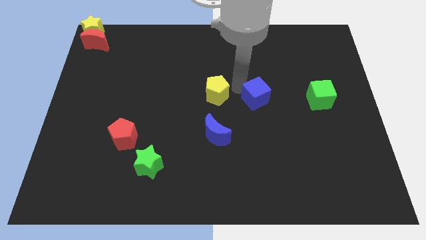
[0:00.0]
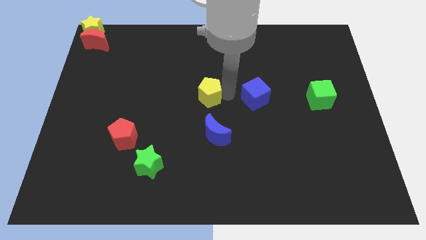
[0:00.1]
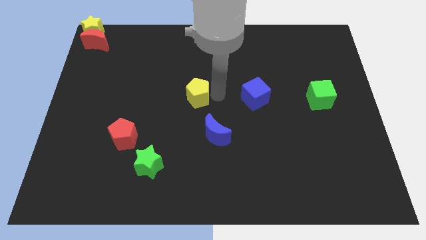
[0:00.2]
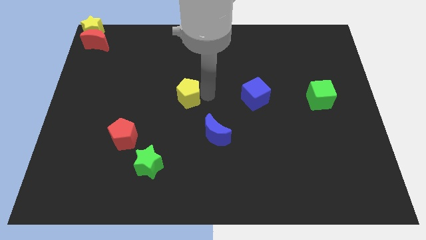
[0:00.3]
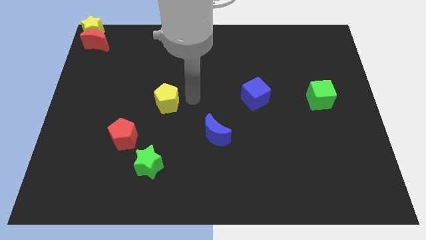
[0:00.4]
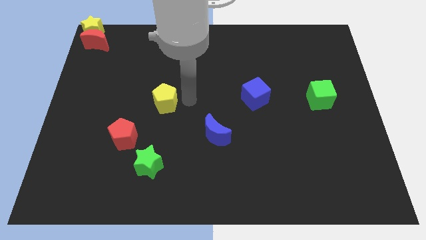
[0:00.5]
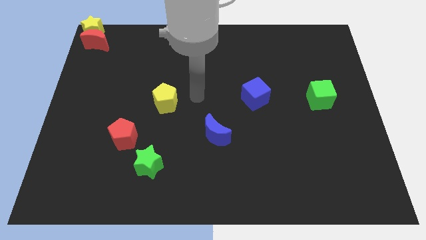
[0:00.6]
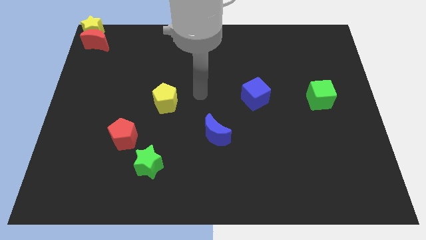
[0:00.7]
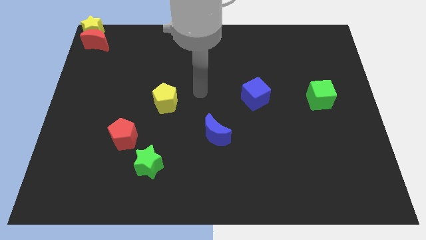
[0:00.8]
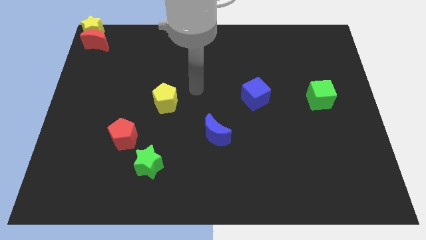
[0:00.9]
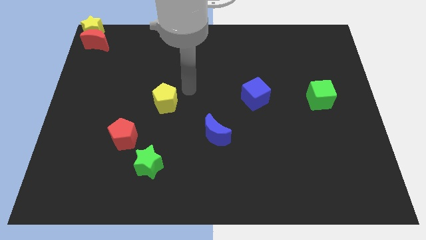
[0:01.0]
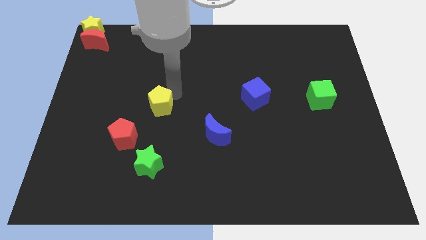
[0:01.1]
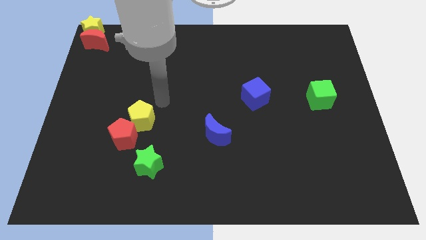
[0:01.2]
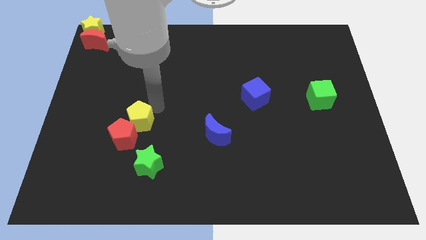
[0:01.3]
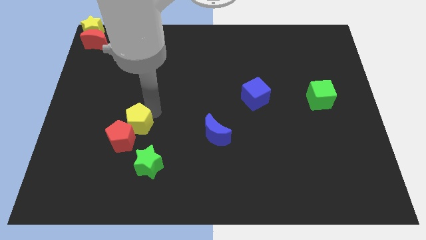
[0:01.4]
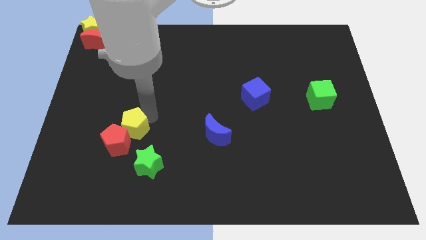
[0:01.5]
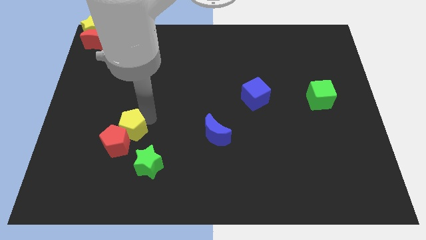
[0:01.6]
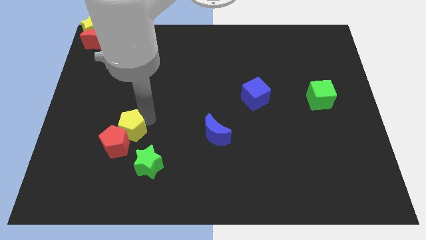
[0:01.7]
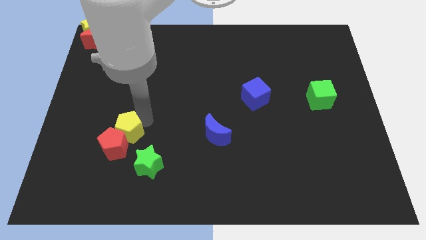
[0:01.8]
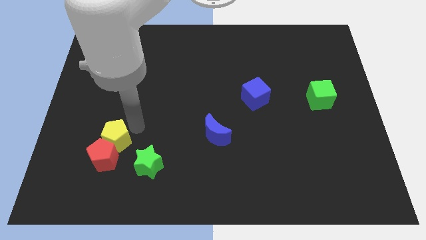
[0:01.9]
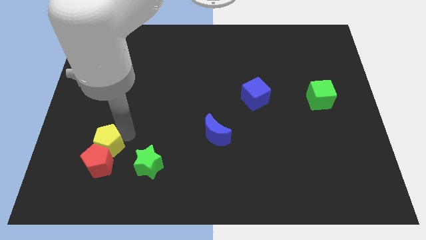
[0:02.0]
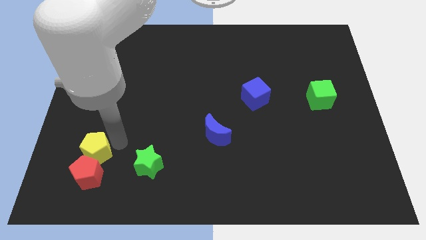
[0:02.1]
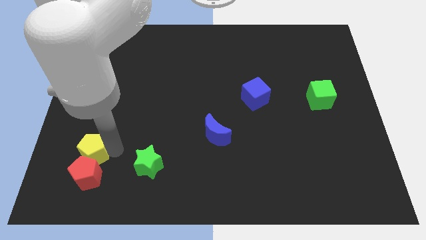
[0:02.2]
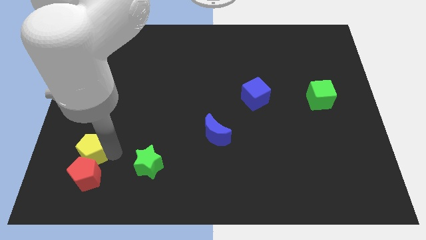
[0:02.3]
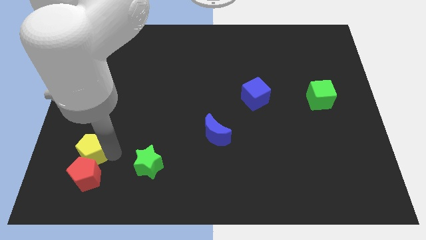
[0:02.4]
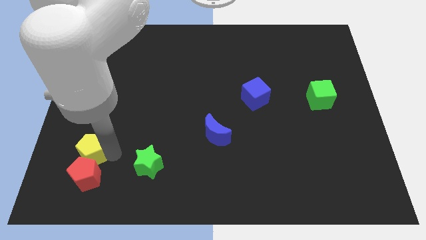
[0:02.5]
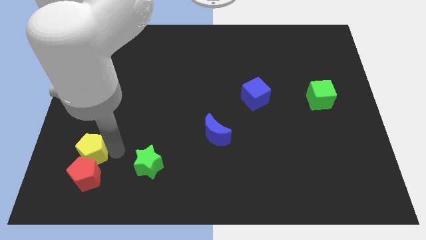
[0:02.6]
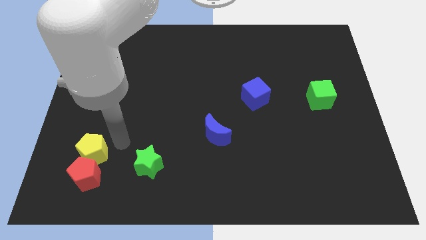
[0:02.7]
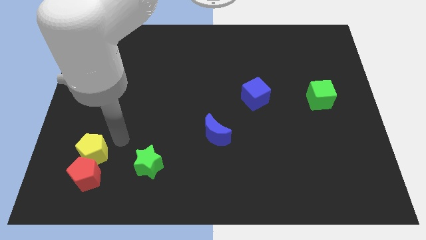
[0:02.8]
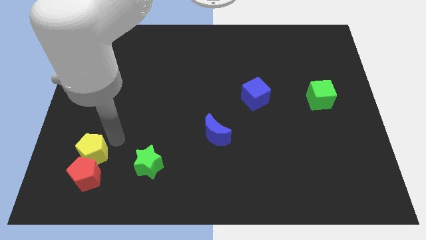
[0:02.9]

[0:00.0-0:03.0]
place both the pentagons to the left side of green star

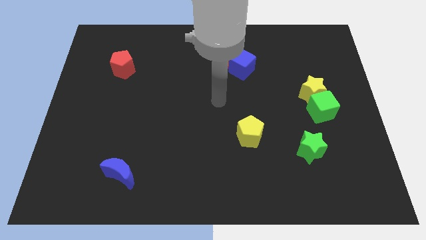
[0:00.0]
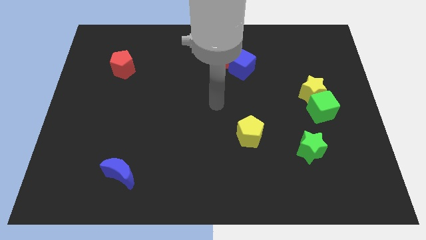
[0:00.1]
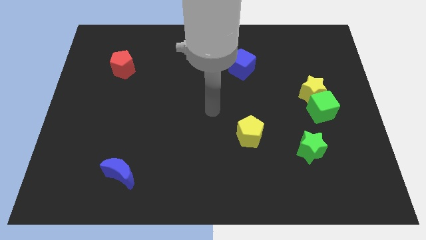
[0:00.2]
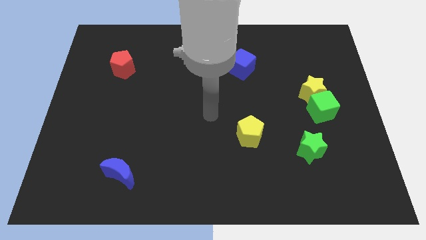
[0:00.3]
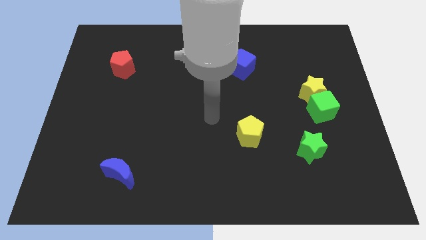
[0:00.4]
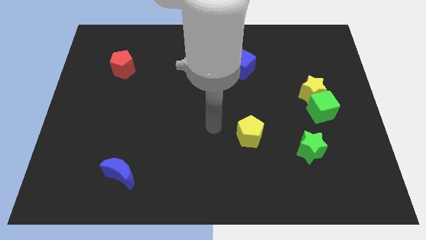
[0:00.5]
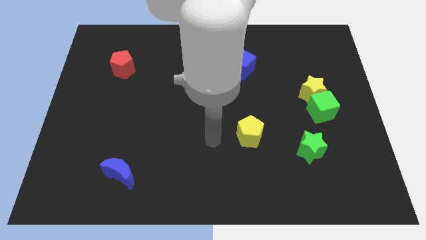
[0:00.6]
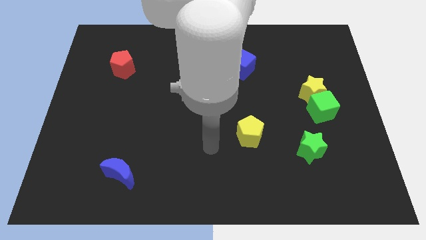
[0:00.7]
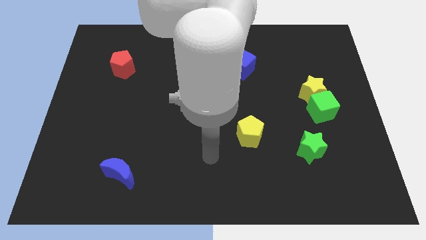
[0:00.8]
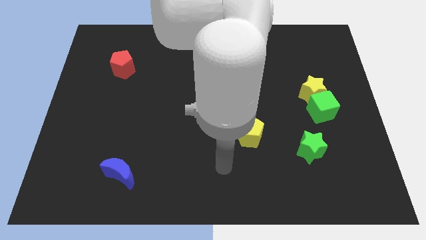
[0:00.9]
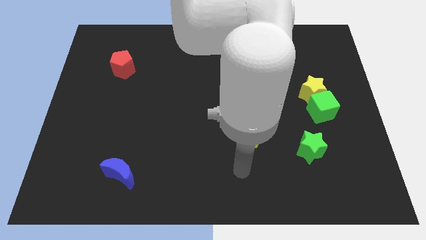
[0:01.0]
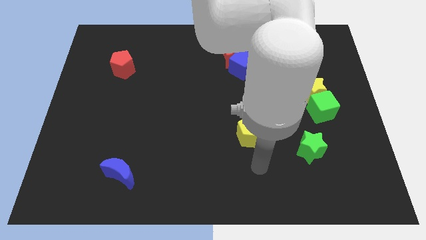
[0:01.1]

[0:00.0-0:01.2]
place your arm at the bottom of yellow pentagon

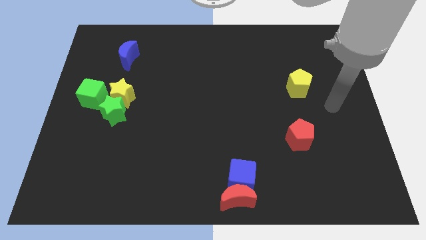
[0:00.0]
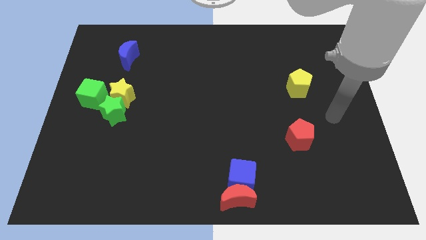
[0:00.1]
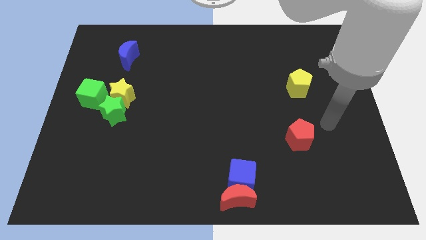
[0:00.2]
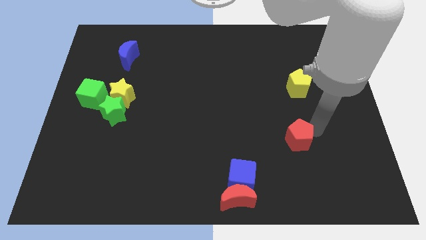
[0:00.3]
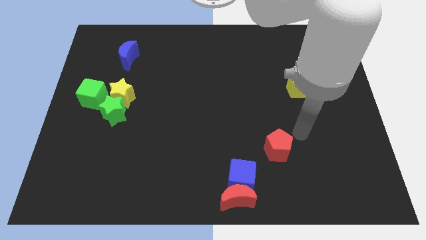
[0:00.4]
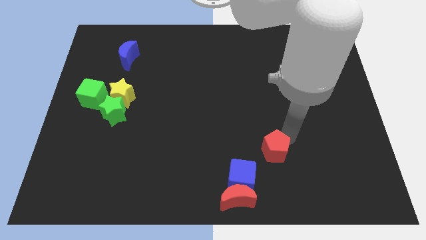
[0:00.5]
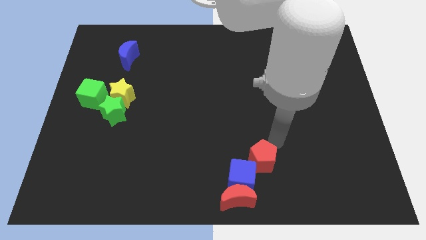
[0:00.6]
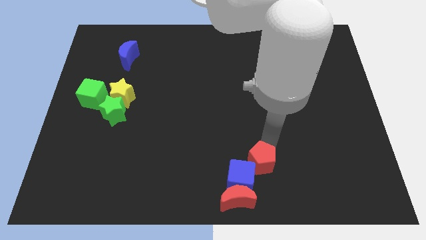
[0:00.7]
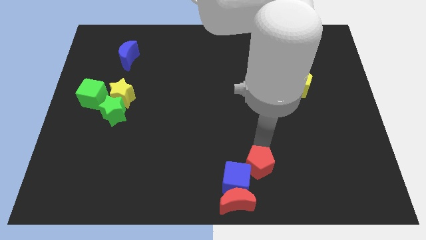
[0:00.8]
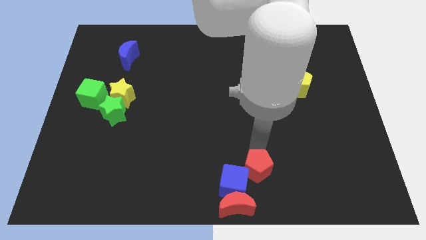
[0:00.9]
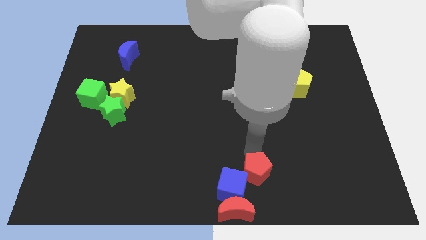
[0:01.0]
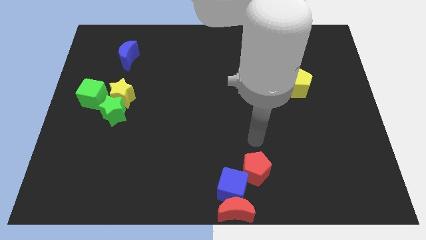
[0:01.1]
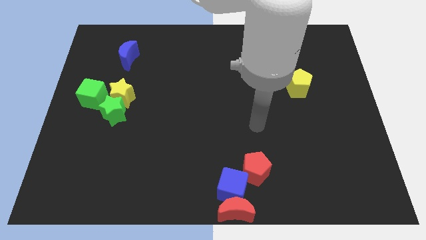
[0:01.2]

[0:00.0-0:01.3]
push the red pentagon into the blue moon

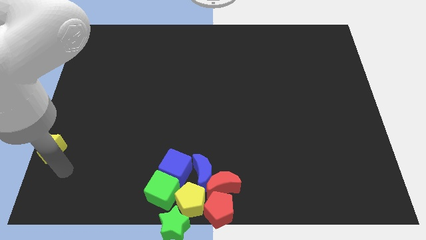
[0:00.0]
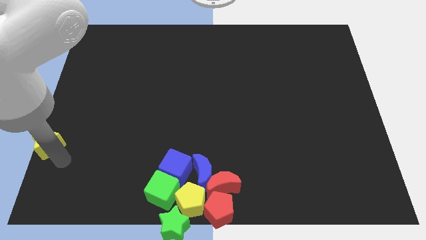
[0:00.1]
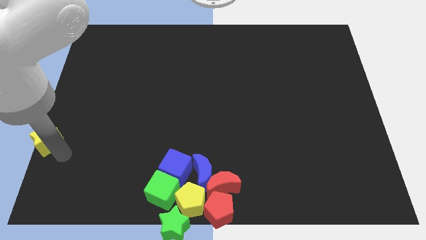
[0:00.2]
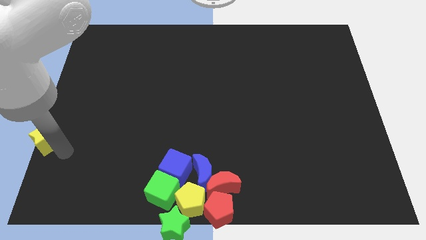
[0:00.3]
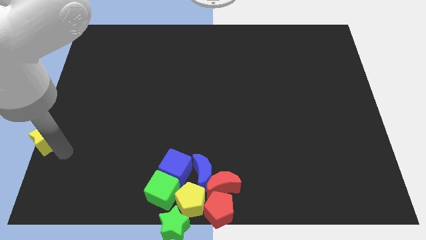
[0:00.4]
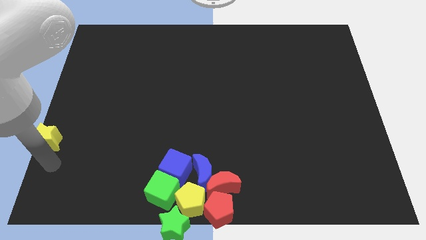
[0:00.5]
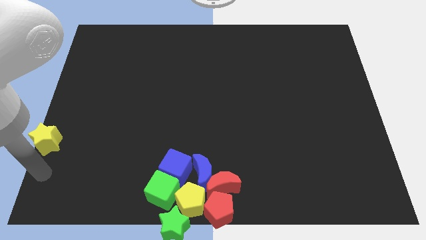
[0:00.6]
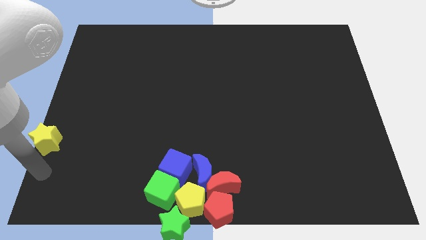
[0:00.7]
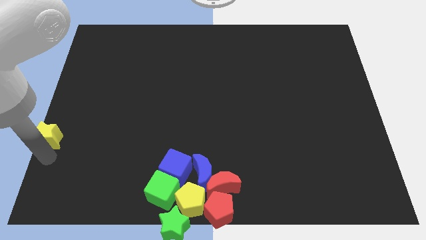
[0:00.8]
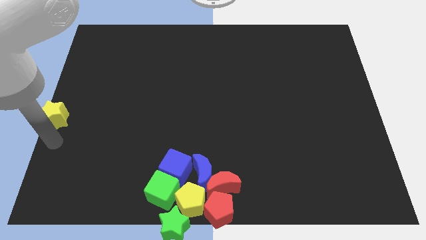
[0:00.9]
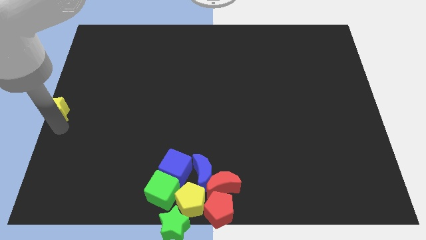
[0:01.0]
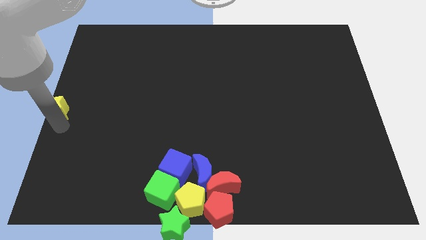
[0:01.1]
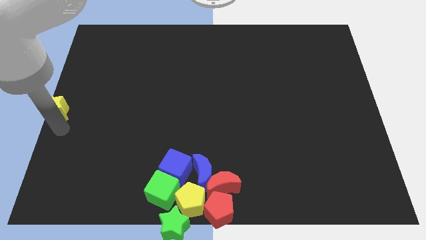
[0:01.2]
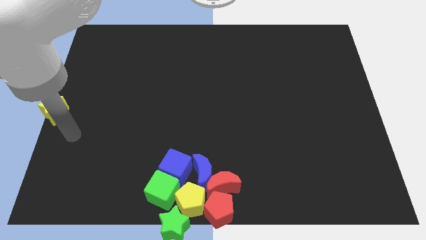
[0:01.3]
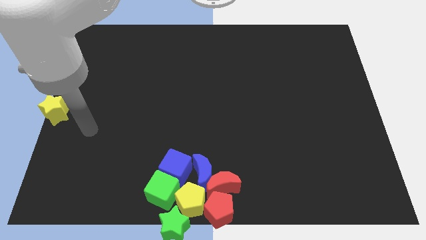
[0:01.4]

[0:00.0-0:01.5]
place the yellow star to the left center of the board

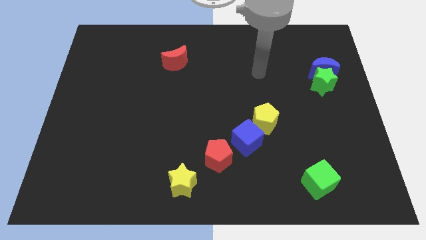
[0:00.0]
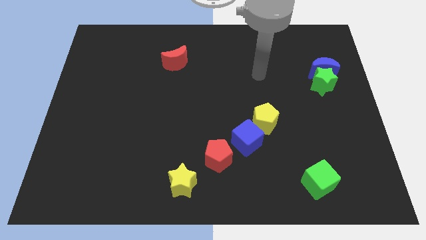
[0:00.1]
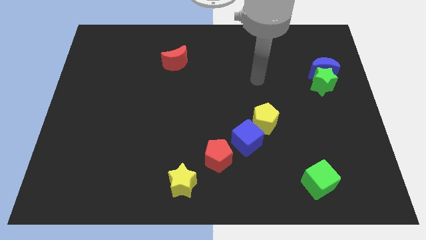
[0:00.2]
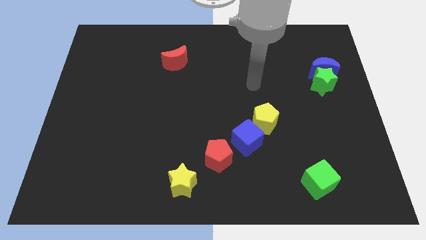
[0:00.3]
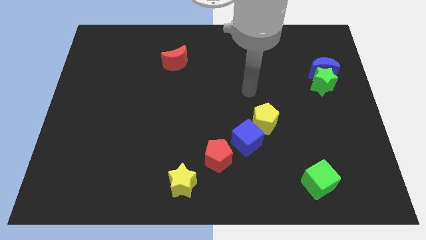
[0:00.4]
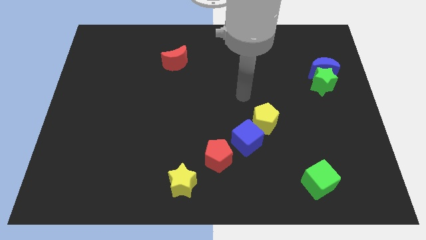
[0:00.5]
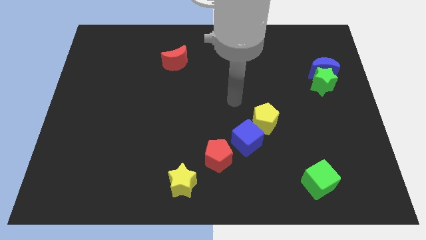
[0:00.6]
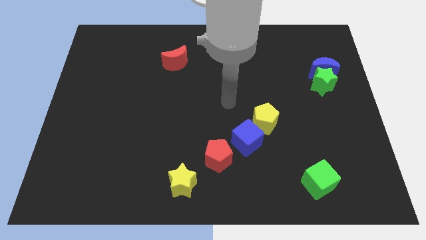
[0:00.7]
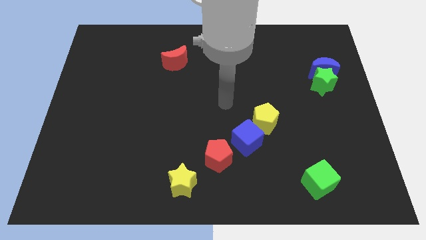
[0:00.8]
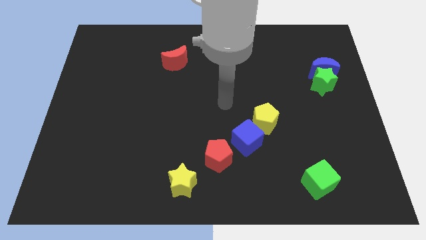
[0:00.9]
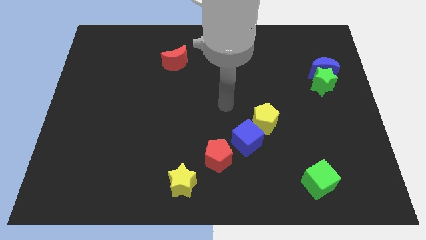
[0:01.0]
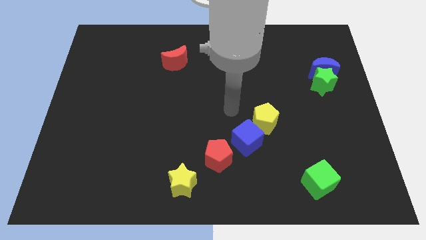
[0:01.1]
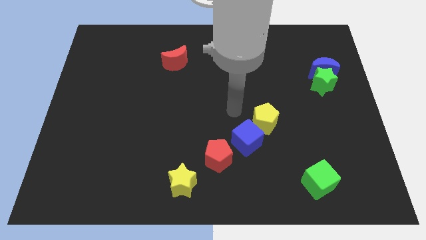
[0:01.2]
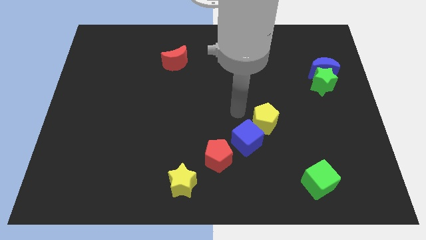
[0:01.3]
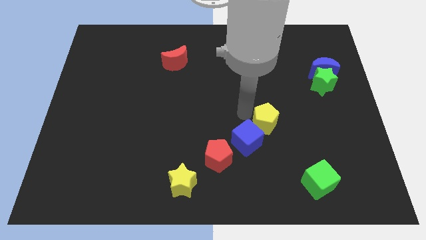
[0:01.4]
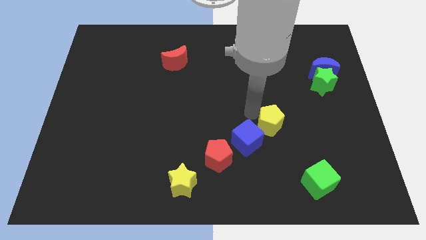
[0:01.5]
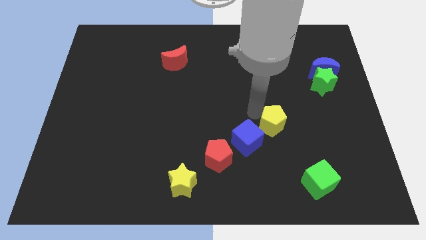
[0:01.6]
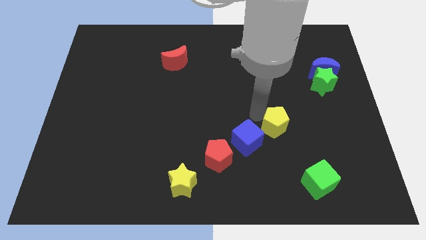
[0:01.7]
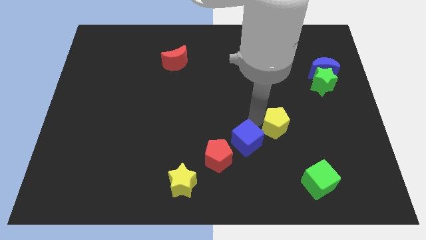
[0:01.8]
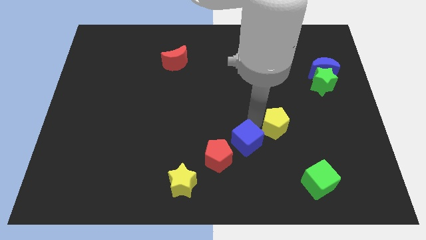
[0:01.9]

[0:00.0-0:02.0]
move the yellow pentagon at the diagonal of the blue cube
